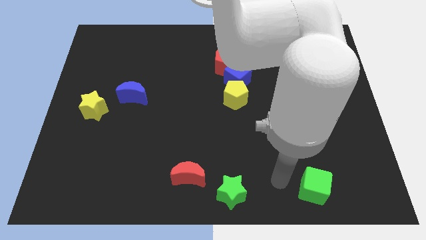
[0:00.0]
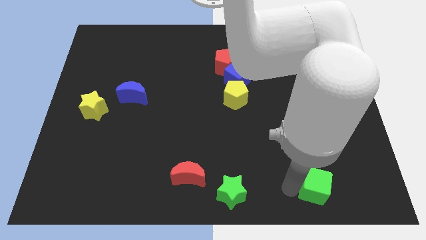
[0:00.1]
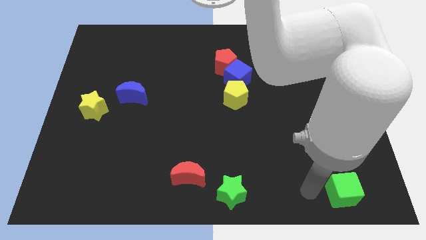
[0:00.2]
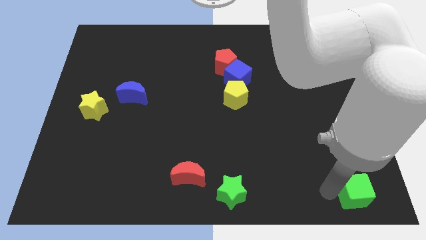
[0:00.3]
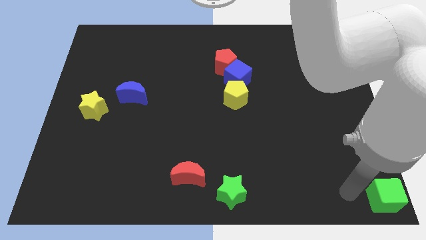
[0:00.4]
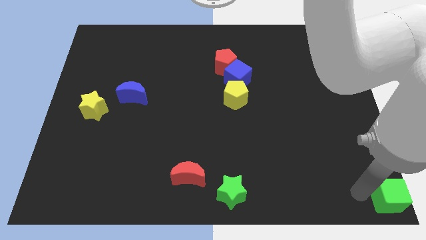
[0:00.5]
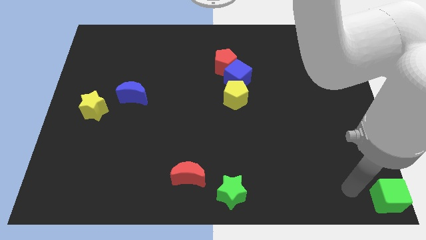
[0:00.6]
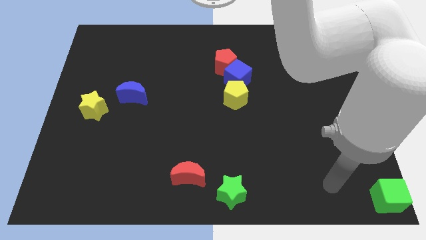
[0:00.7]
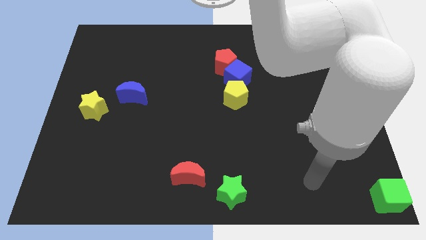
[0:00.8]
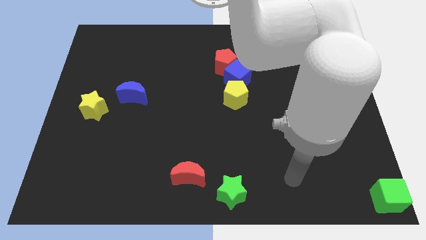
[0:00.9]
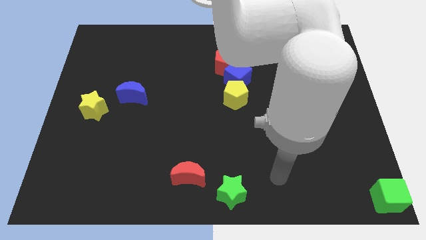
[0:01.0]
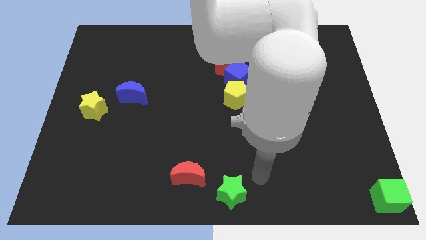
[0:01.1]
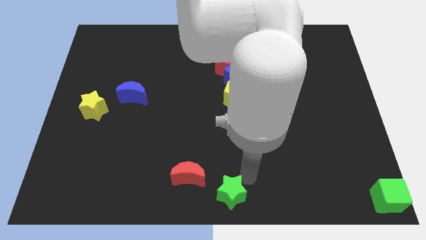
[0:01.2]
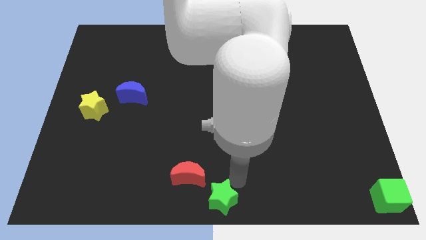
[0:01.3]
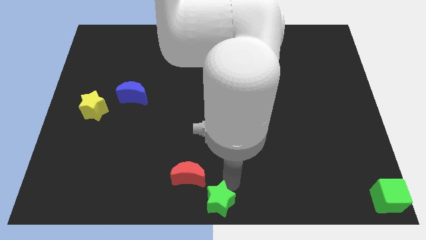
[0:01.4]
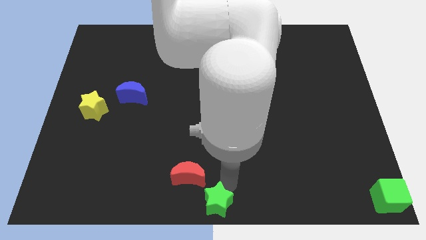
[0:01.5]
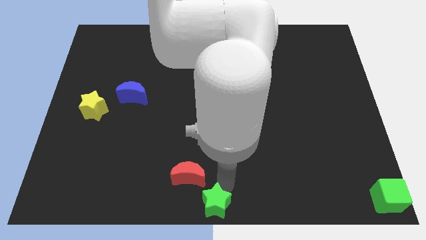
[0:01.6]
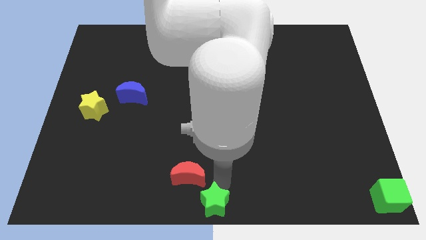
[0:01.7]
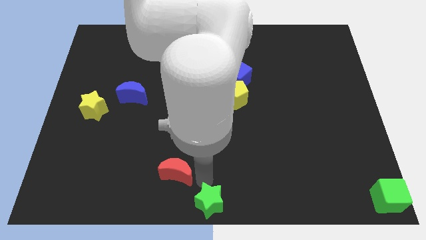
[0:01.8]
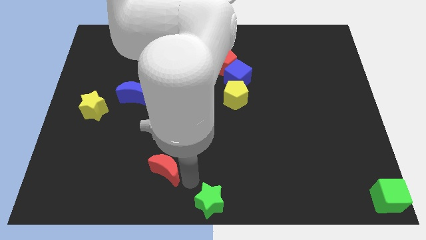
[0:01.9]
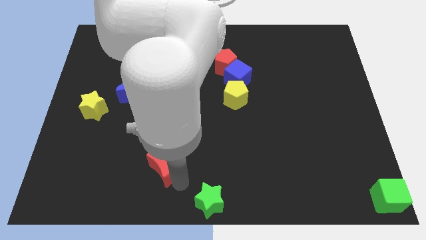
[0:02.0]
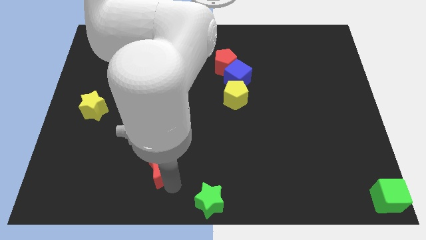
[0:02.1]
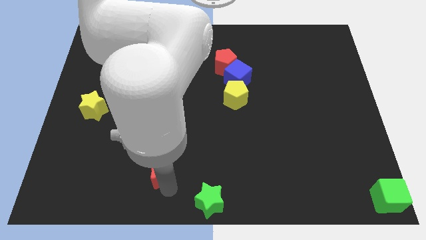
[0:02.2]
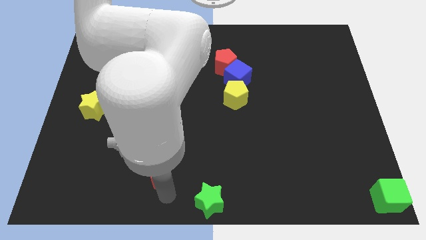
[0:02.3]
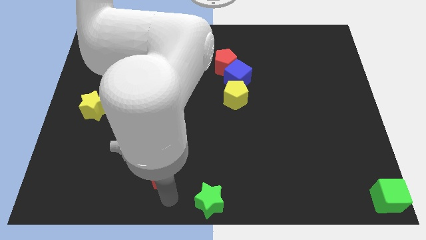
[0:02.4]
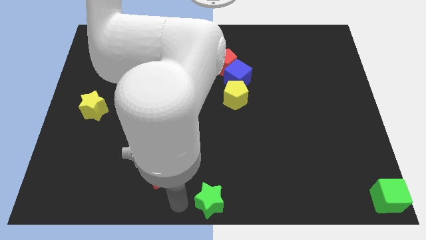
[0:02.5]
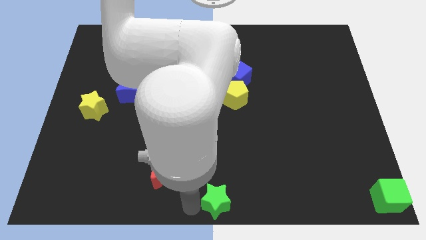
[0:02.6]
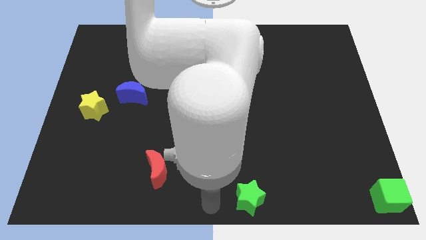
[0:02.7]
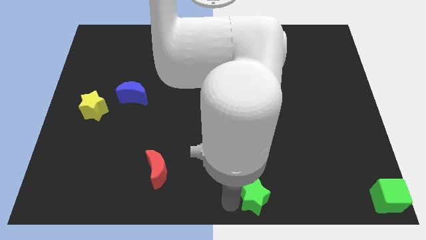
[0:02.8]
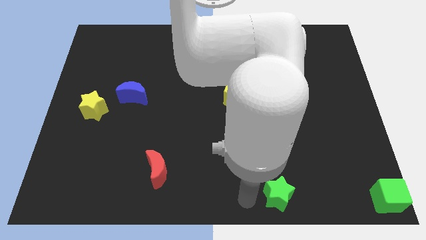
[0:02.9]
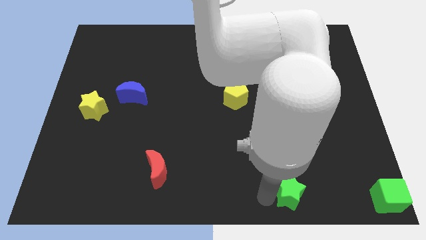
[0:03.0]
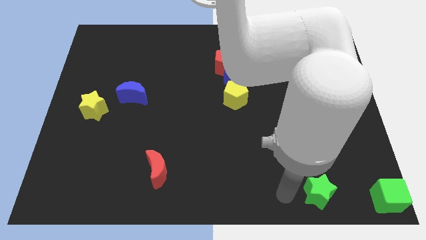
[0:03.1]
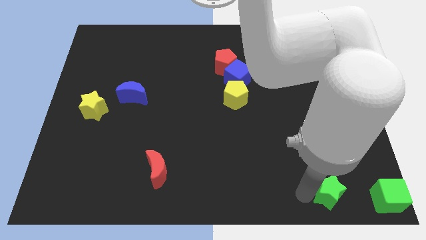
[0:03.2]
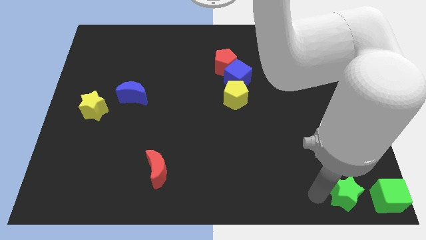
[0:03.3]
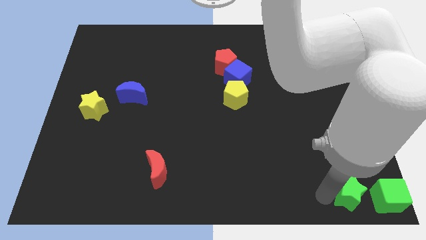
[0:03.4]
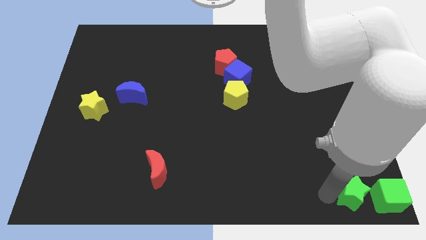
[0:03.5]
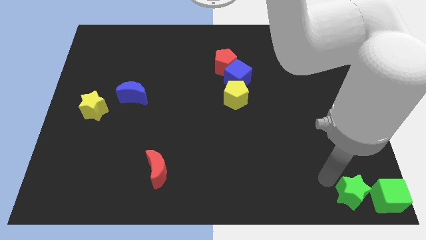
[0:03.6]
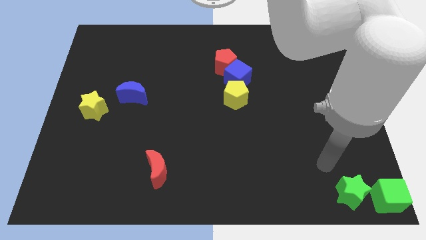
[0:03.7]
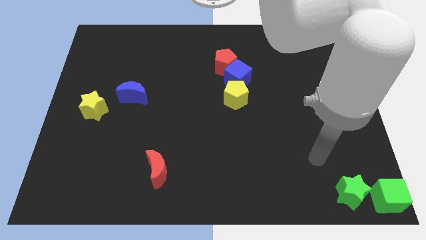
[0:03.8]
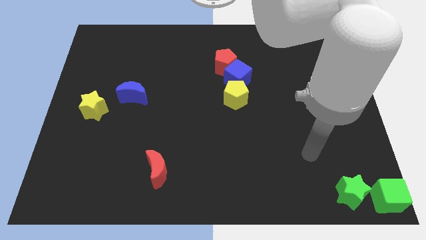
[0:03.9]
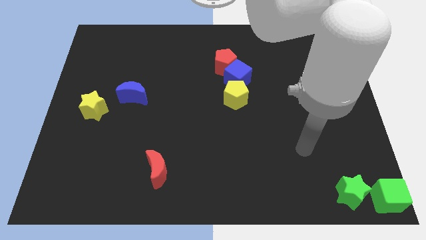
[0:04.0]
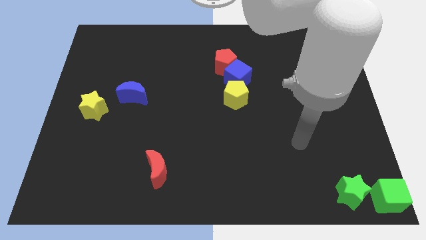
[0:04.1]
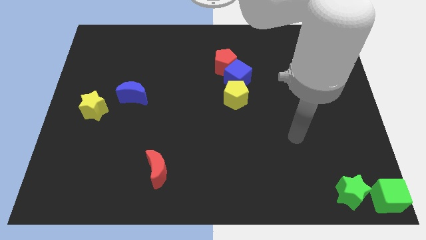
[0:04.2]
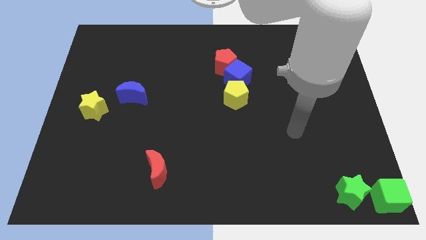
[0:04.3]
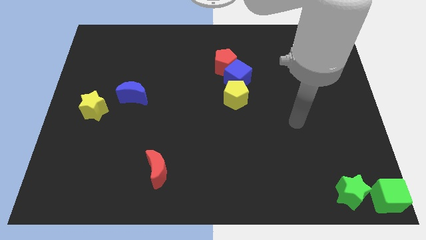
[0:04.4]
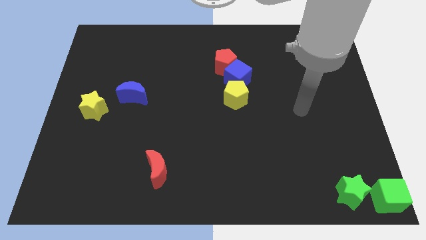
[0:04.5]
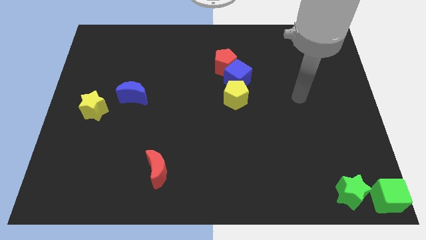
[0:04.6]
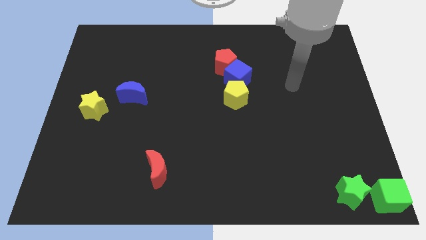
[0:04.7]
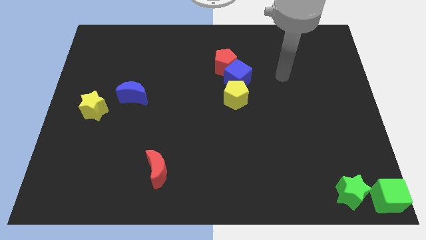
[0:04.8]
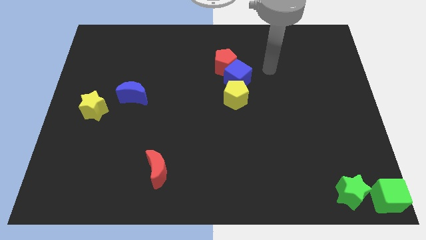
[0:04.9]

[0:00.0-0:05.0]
push the green blocks to the bottom right corner of the board

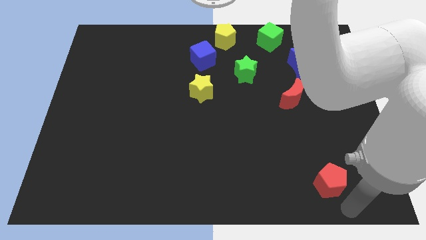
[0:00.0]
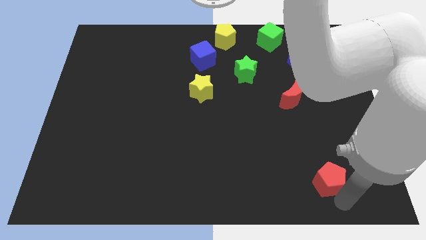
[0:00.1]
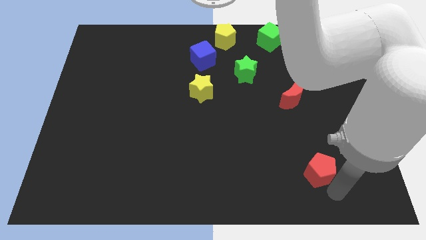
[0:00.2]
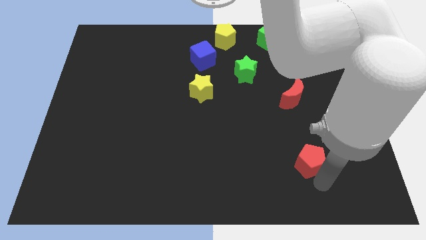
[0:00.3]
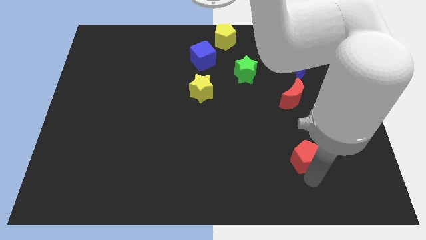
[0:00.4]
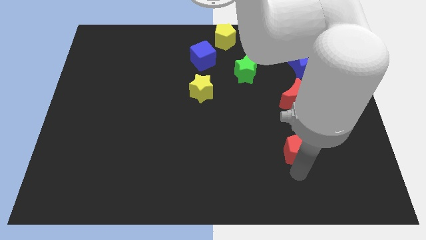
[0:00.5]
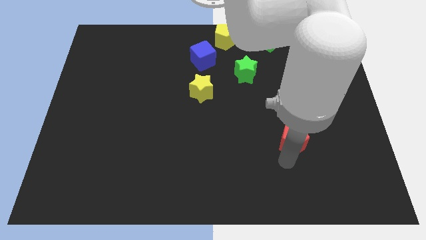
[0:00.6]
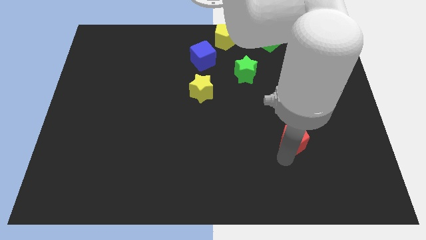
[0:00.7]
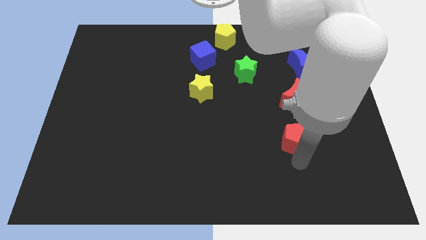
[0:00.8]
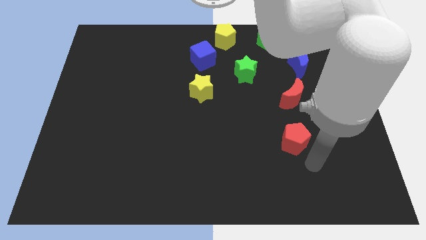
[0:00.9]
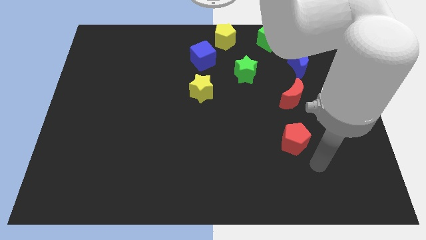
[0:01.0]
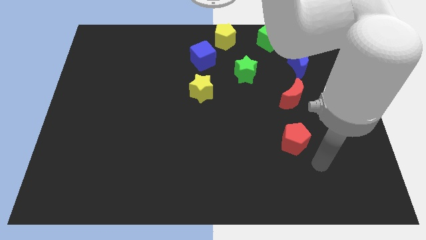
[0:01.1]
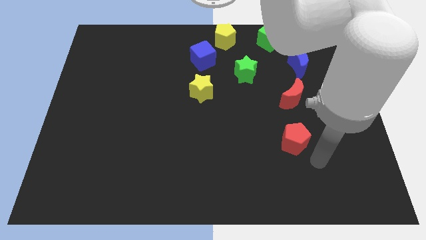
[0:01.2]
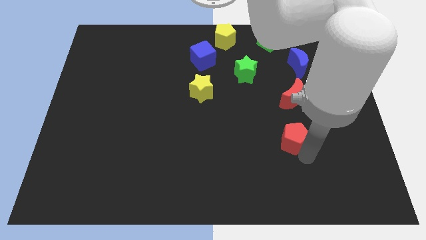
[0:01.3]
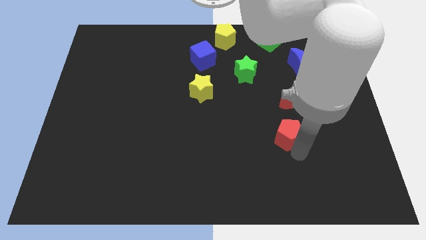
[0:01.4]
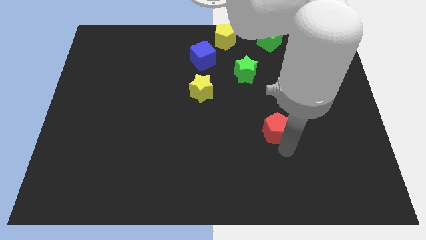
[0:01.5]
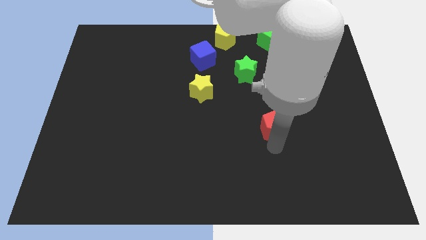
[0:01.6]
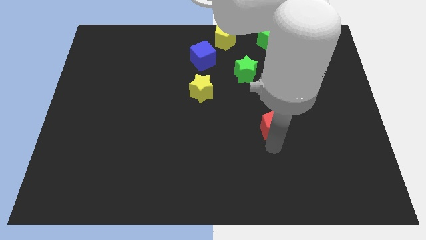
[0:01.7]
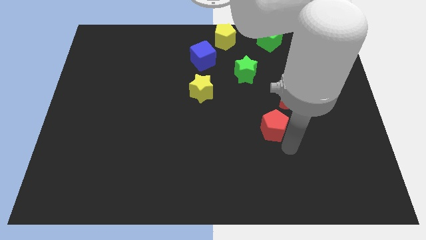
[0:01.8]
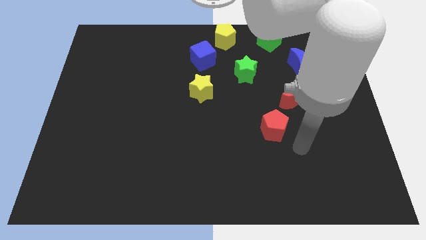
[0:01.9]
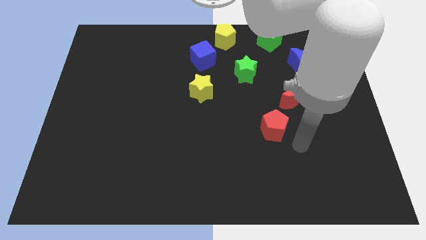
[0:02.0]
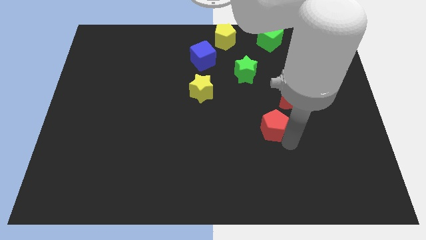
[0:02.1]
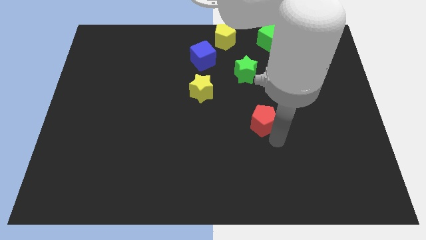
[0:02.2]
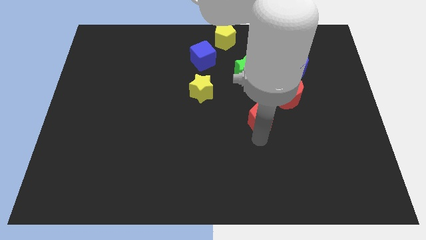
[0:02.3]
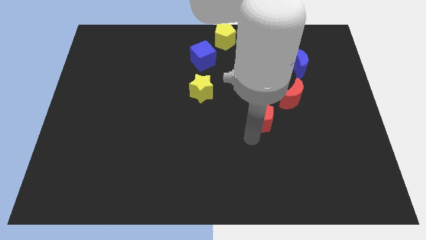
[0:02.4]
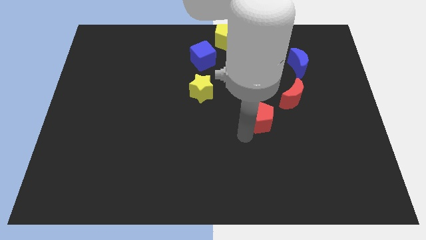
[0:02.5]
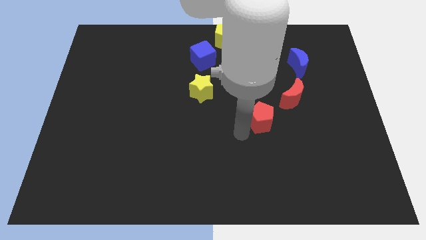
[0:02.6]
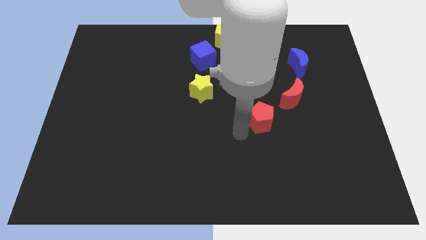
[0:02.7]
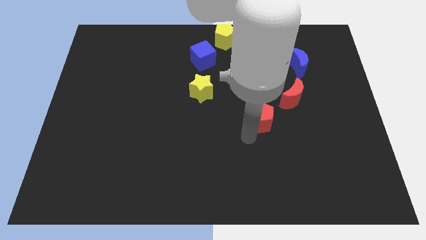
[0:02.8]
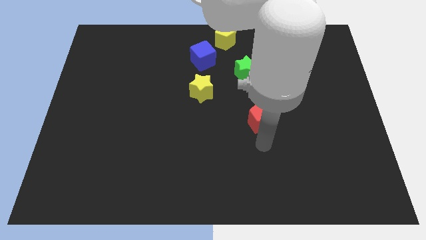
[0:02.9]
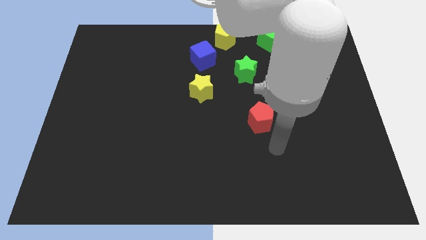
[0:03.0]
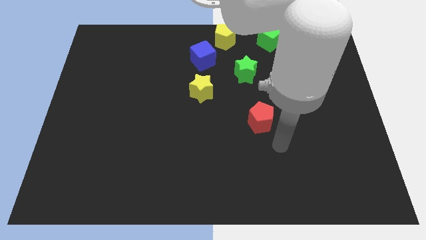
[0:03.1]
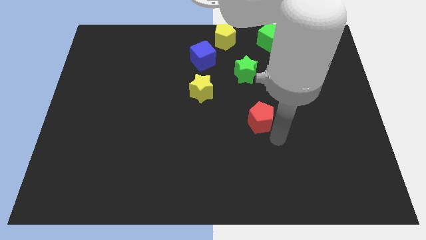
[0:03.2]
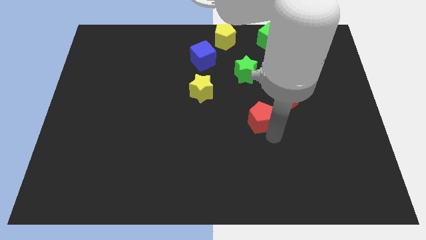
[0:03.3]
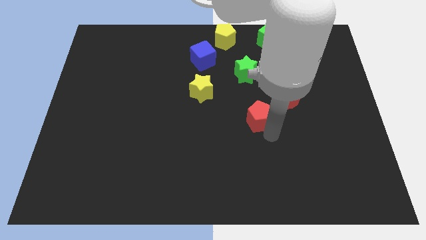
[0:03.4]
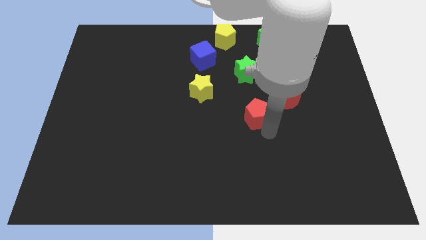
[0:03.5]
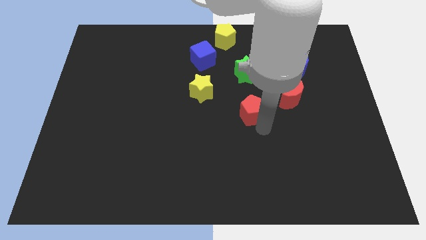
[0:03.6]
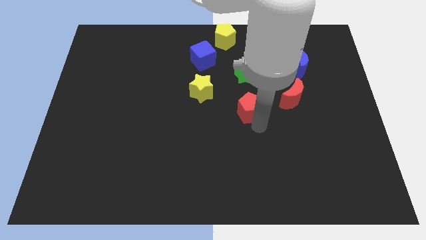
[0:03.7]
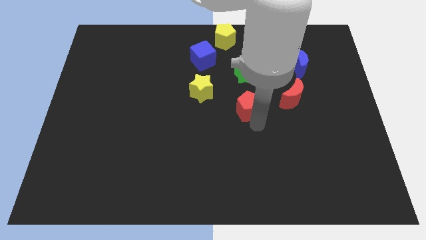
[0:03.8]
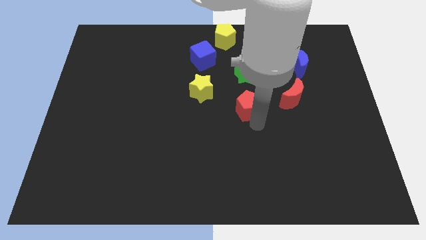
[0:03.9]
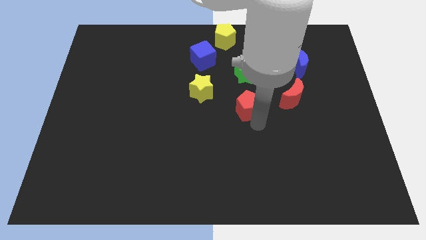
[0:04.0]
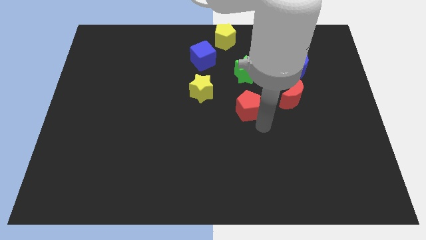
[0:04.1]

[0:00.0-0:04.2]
push the red pentagon to the bottom of the green star
